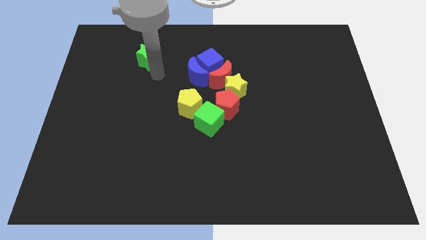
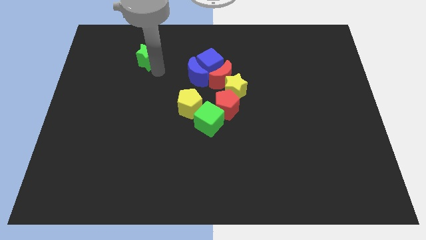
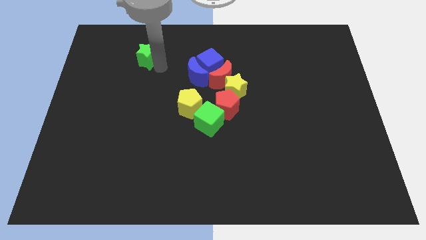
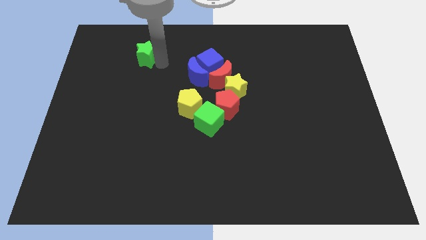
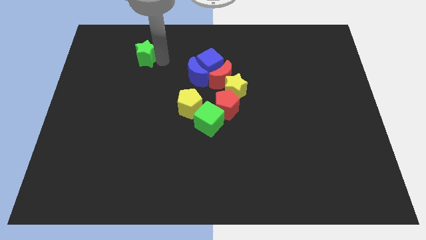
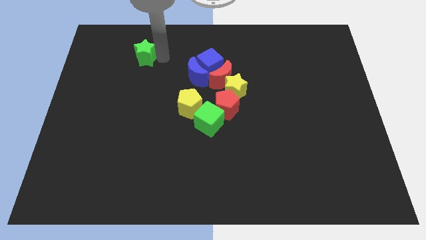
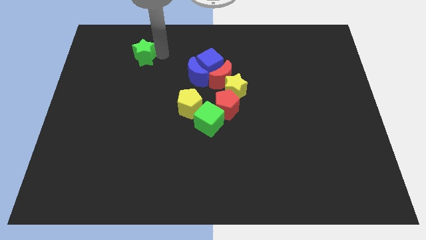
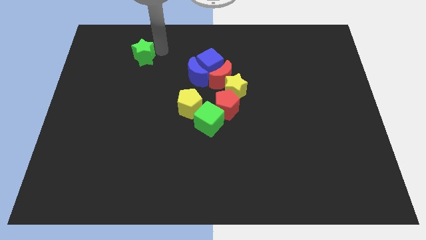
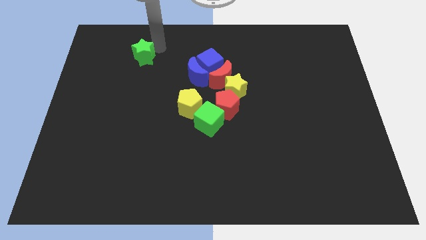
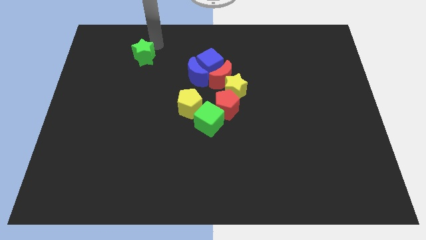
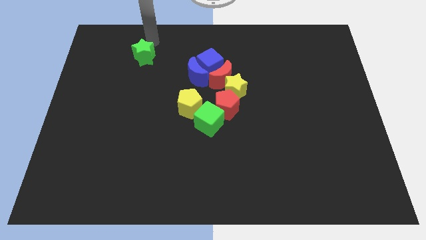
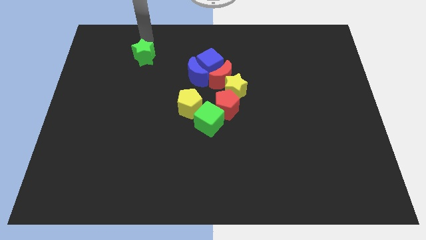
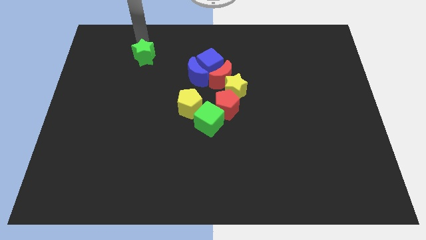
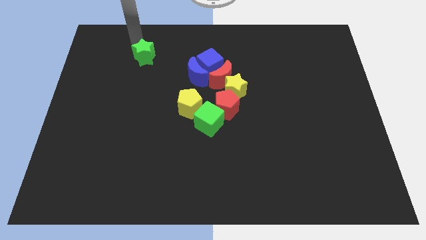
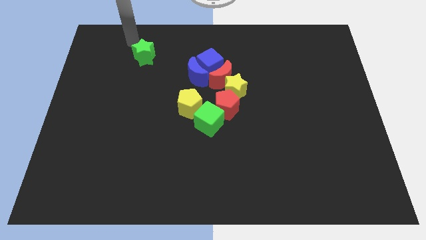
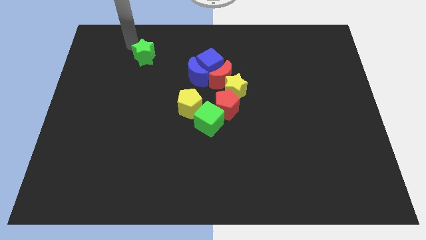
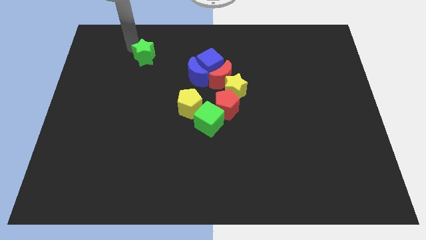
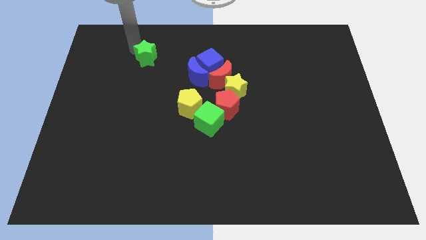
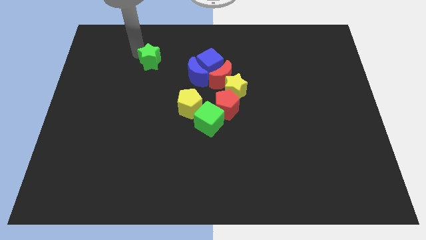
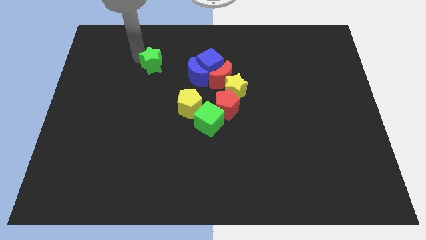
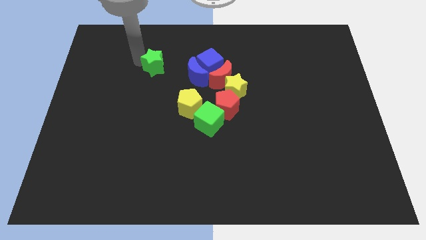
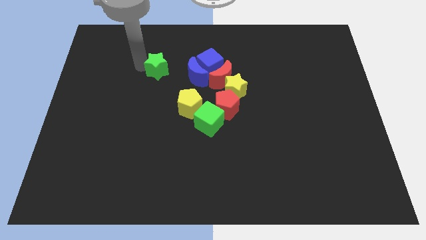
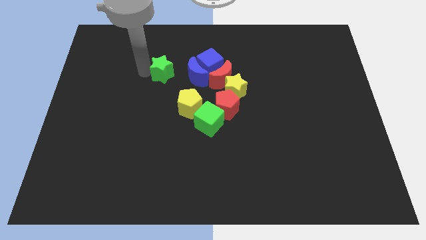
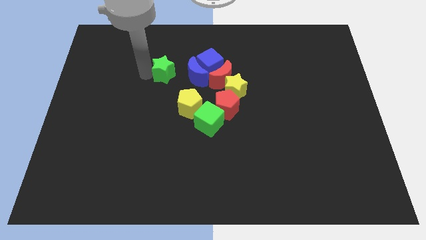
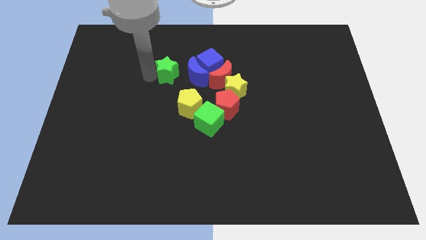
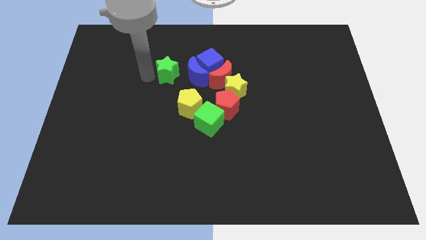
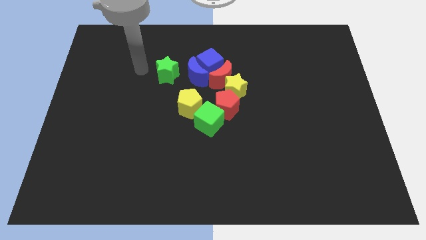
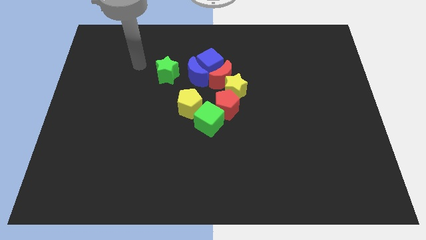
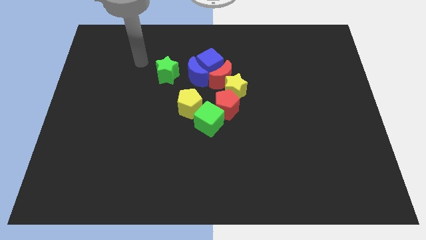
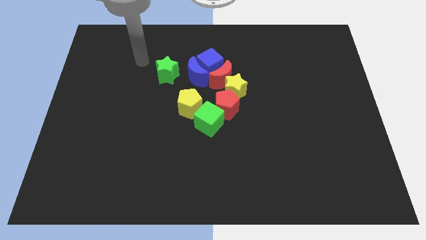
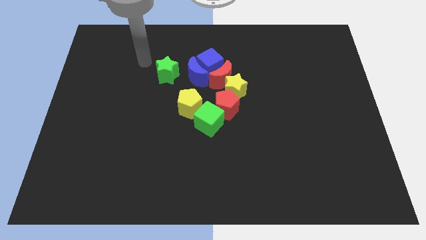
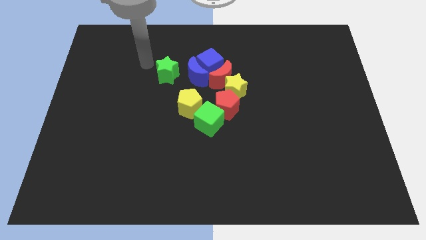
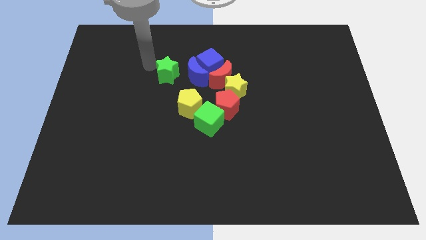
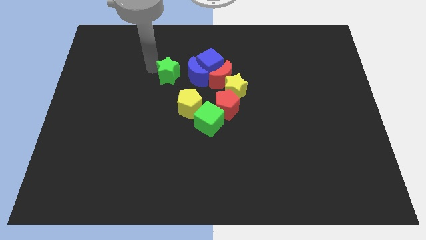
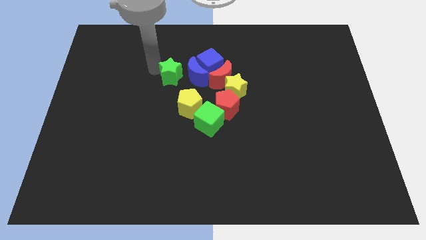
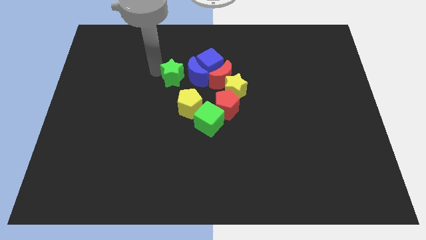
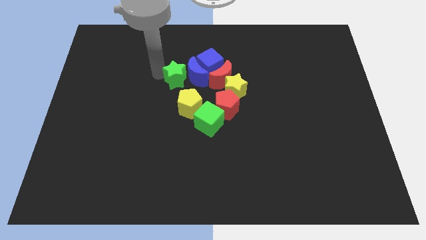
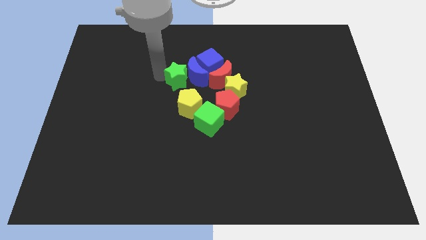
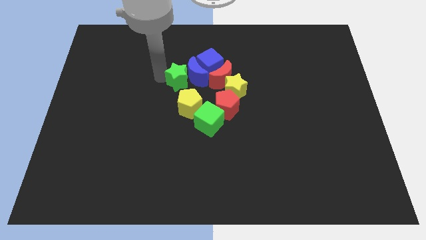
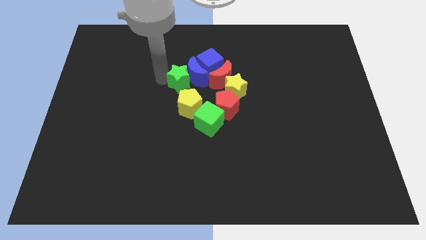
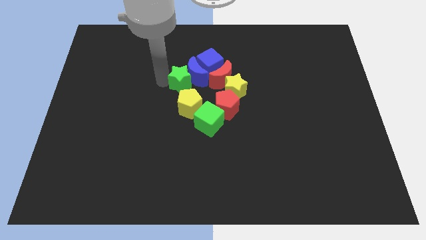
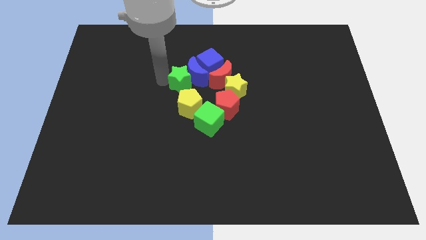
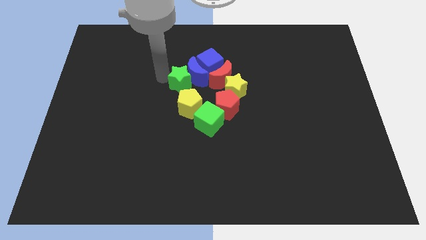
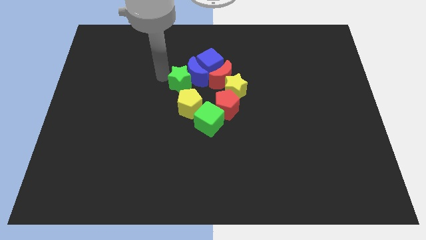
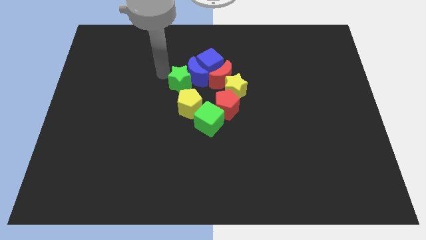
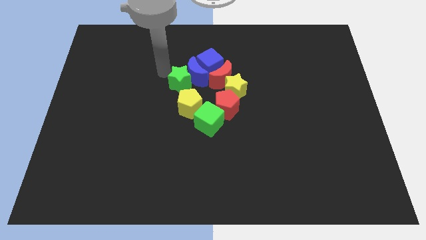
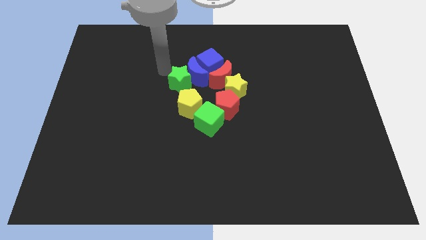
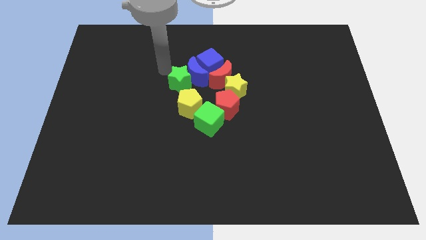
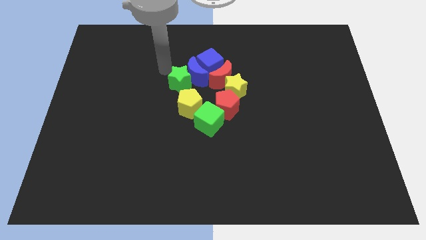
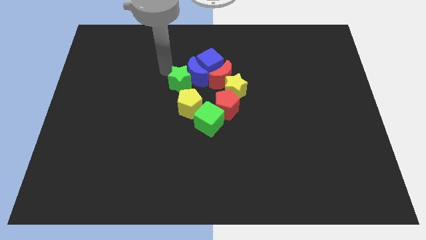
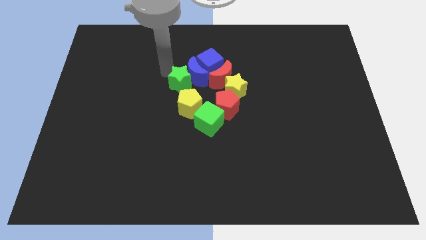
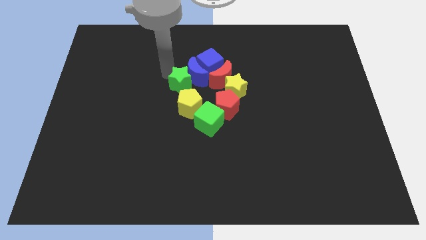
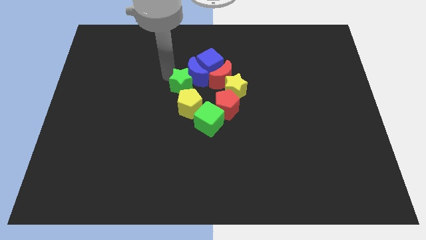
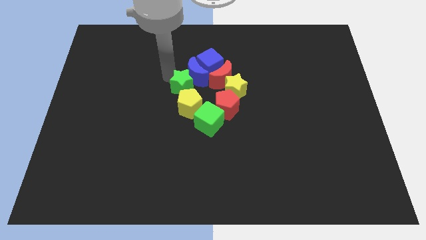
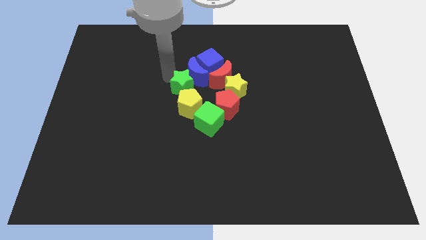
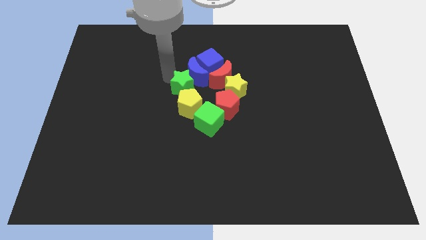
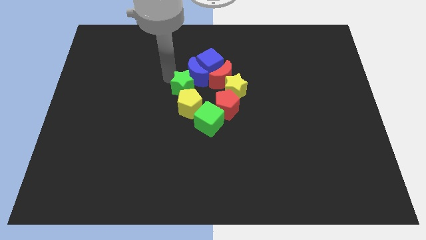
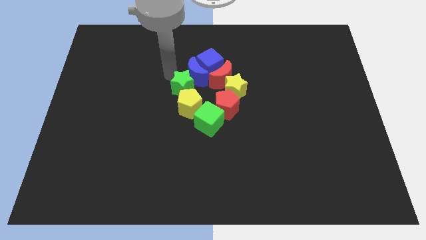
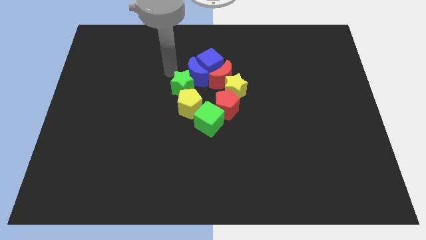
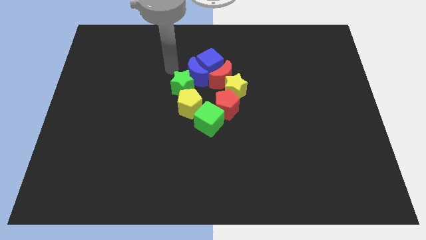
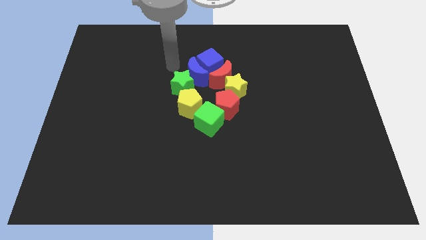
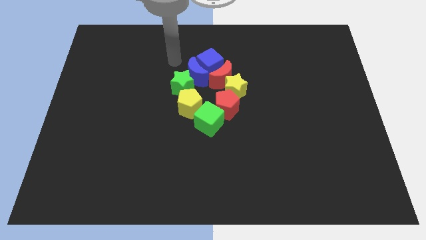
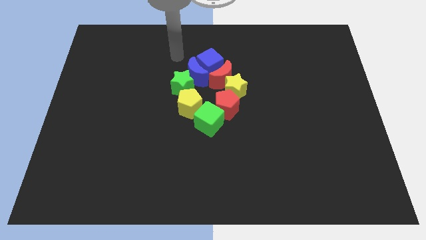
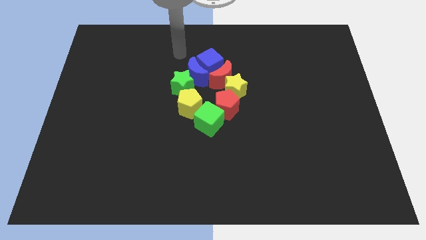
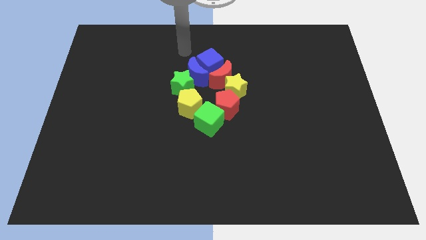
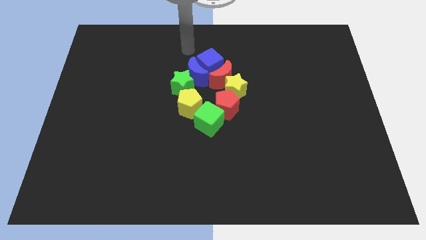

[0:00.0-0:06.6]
drag the green star diagonal top left to yellow pentagon

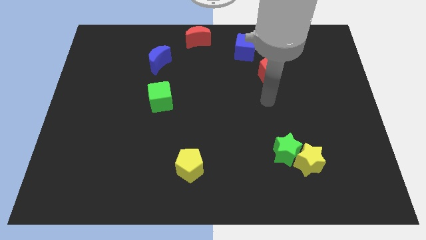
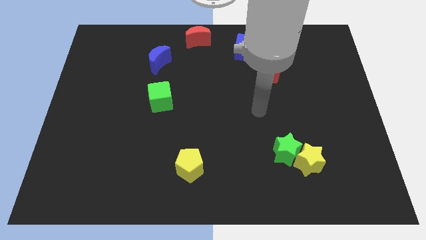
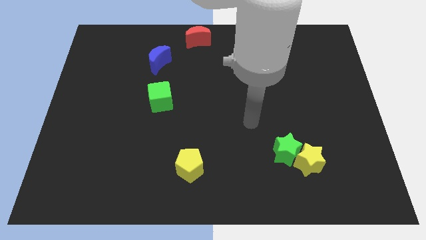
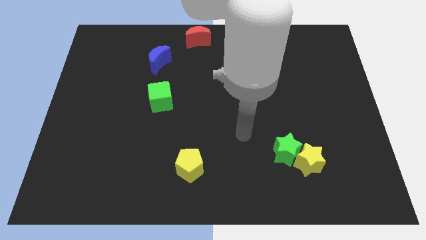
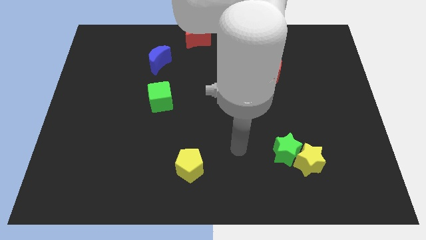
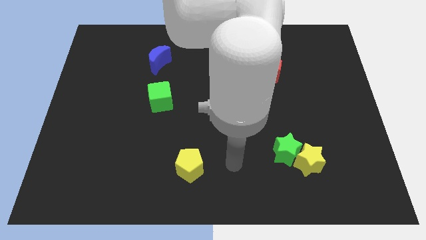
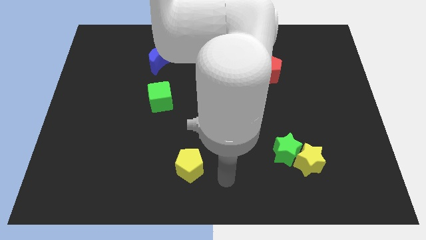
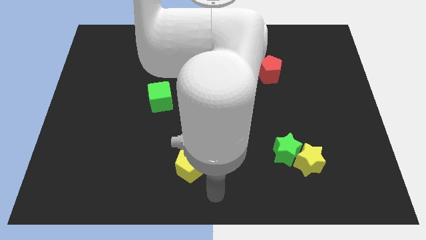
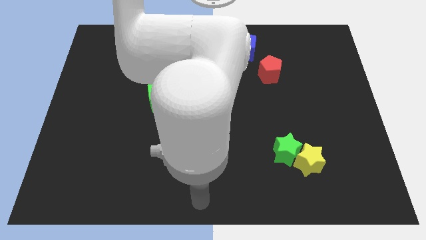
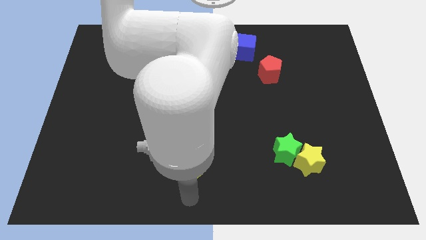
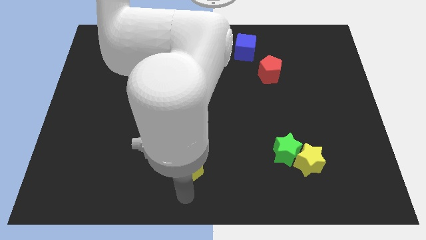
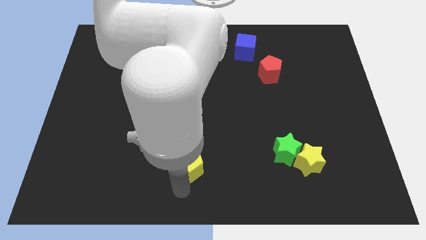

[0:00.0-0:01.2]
point your arm at the bottom of the yellow pentagon

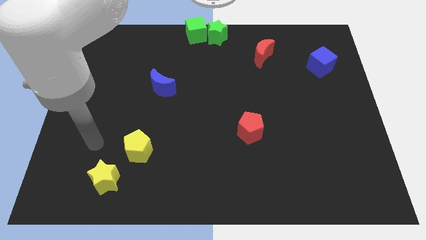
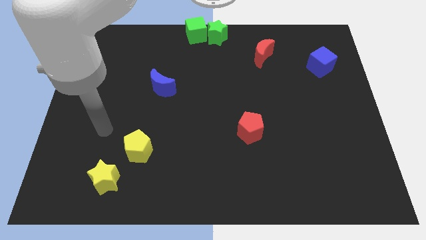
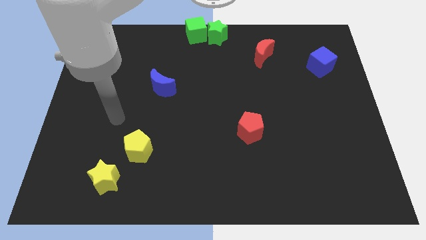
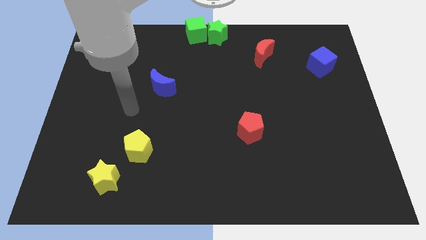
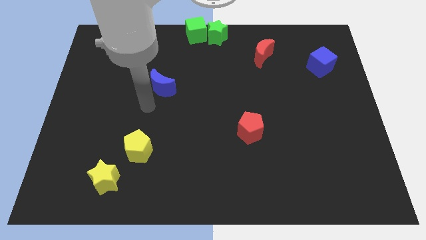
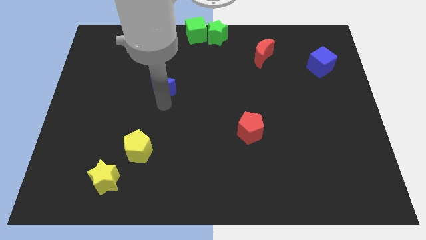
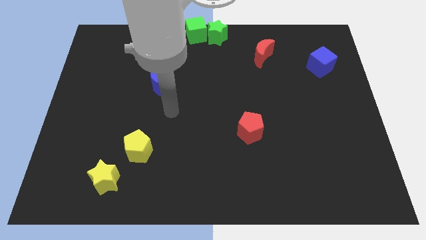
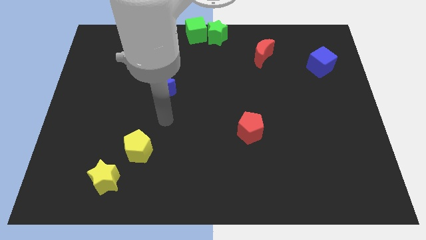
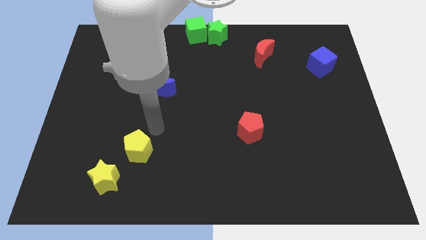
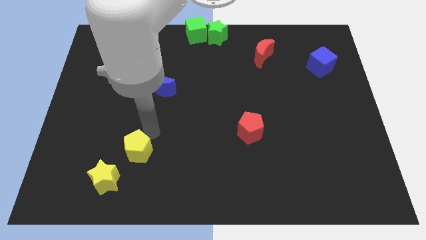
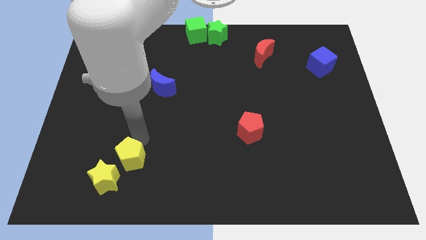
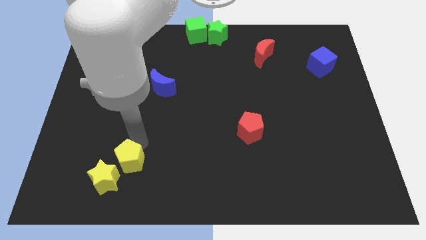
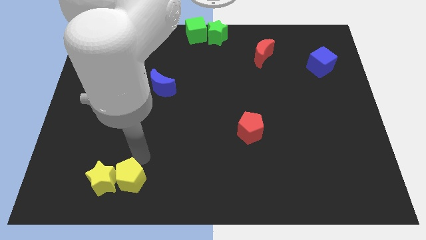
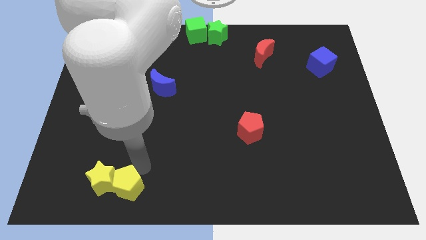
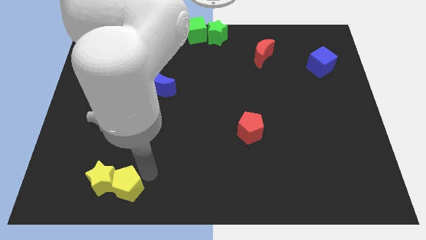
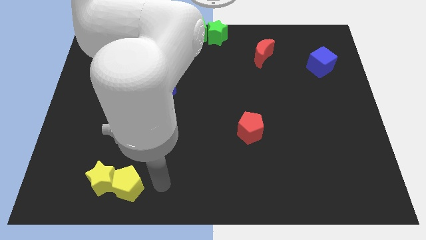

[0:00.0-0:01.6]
move the yellow pentagon beside the yellow star
